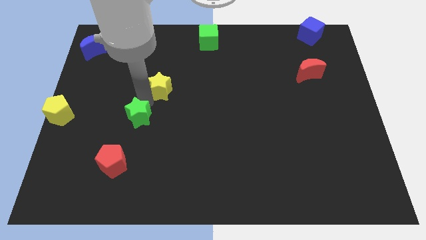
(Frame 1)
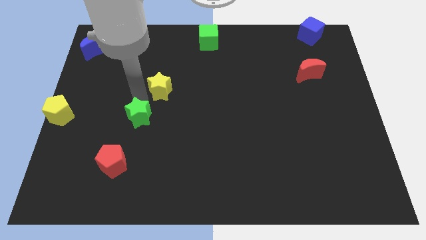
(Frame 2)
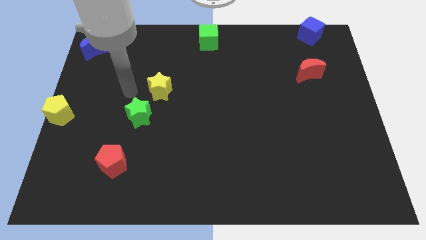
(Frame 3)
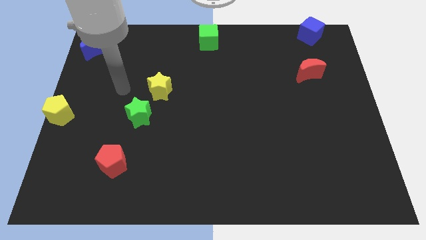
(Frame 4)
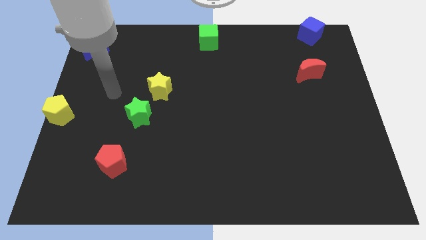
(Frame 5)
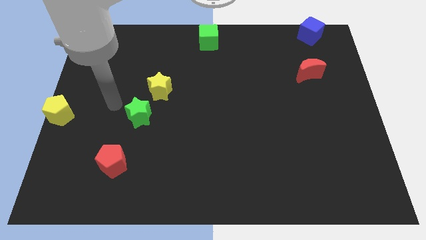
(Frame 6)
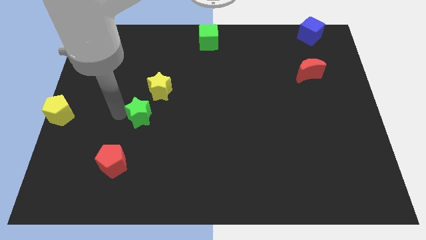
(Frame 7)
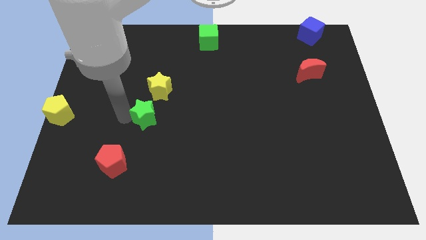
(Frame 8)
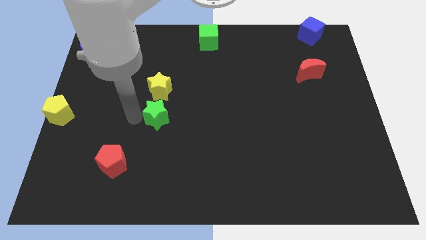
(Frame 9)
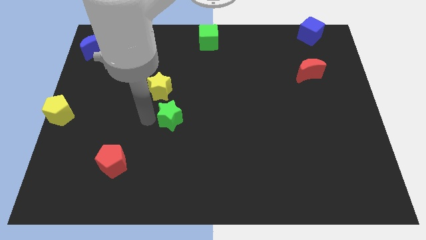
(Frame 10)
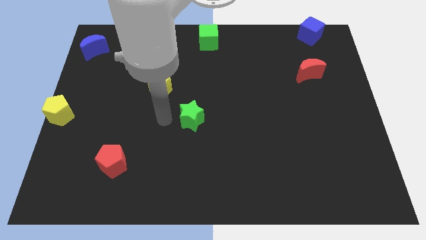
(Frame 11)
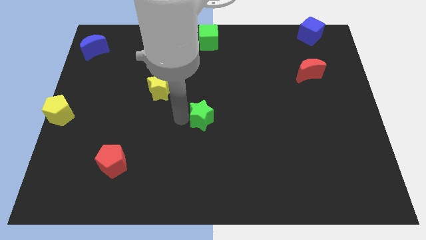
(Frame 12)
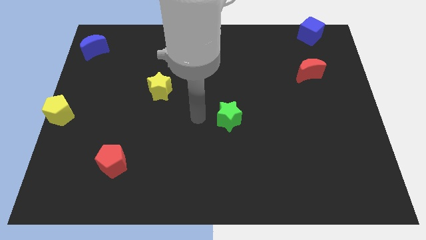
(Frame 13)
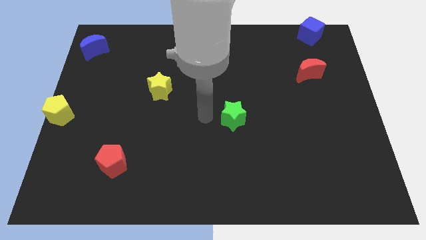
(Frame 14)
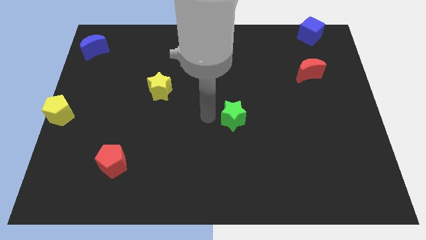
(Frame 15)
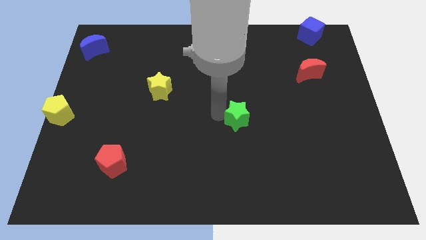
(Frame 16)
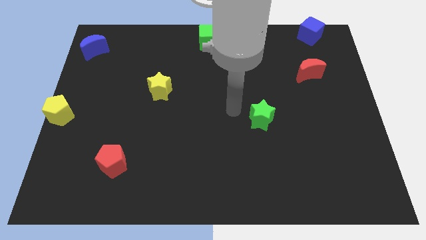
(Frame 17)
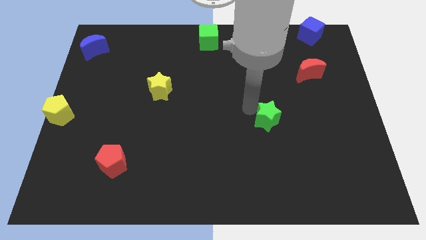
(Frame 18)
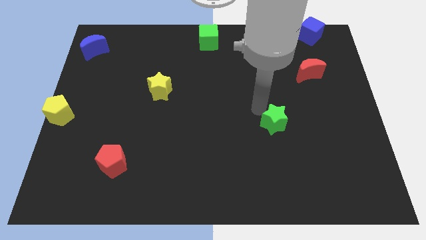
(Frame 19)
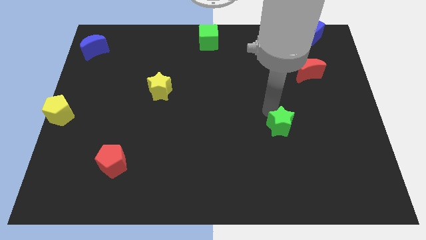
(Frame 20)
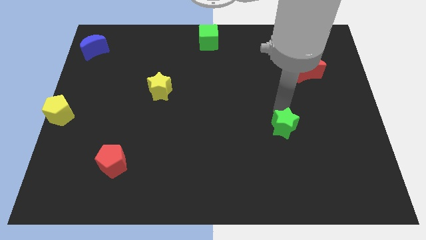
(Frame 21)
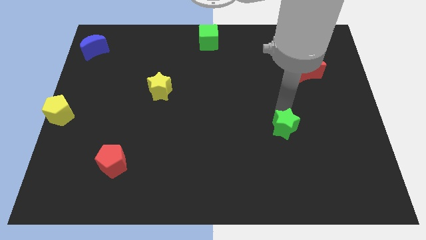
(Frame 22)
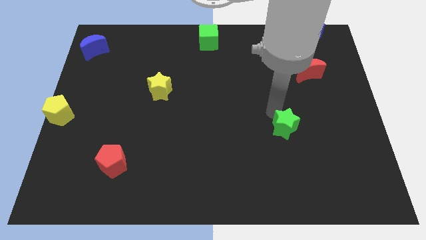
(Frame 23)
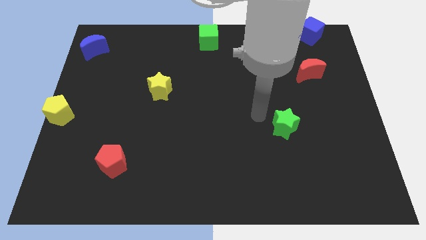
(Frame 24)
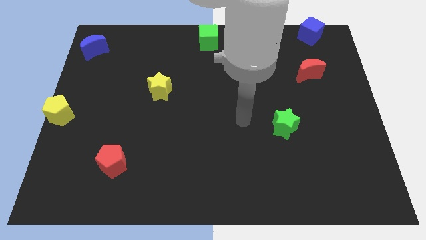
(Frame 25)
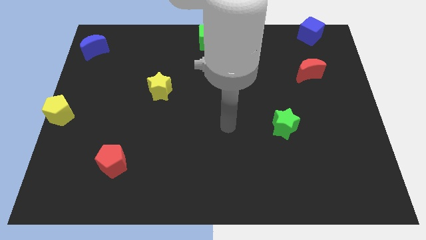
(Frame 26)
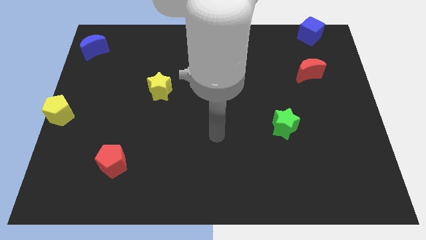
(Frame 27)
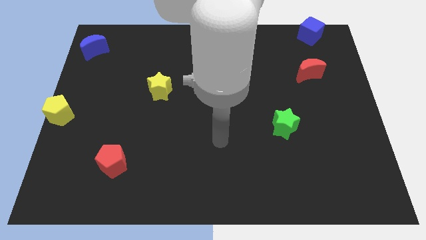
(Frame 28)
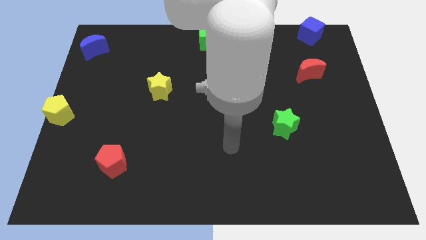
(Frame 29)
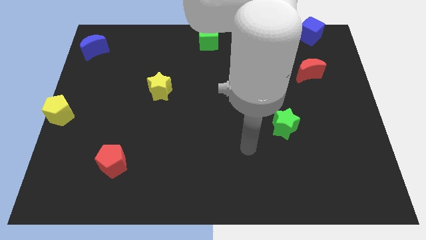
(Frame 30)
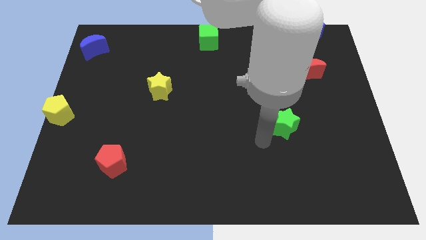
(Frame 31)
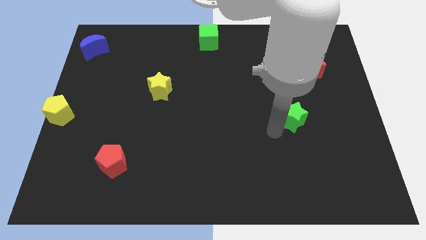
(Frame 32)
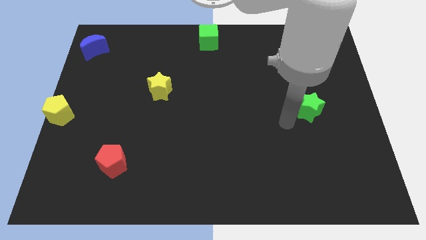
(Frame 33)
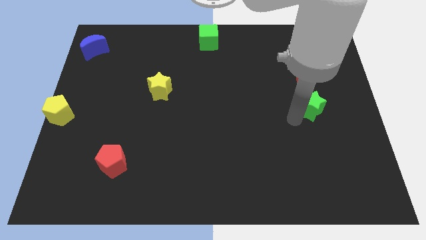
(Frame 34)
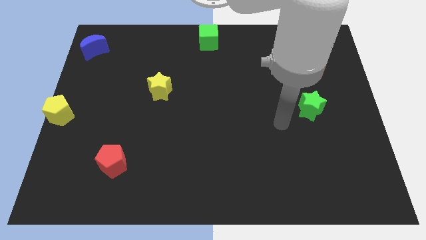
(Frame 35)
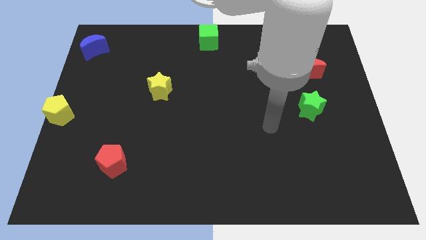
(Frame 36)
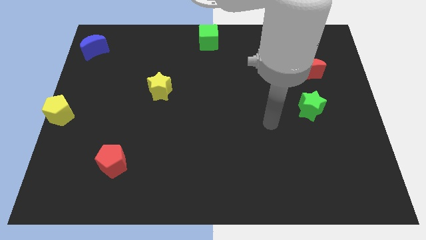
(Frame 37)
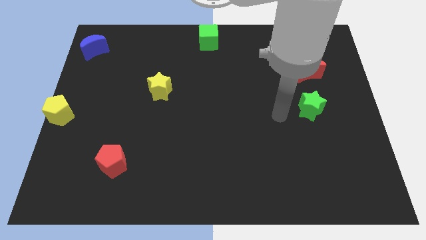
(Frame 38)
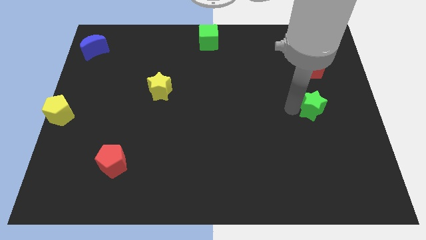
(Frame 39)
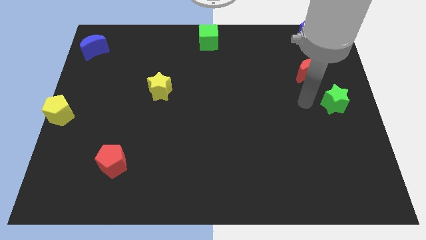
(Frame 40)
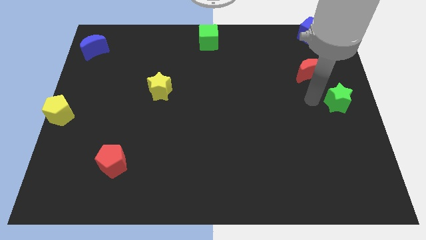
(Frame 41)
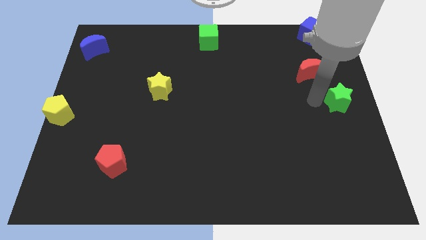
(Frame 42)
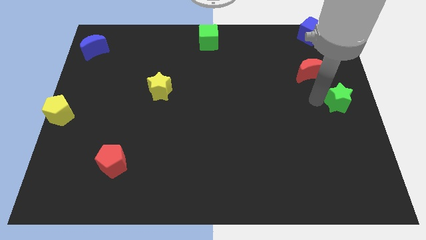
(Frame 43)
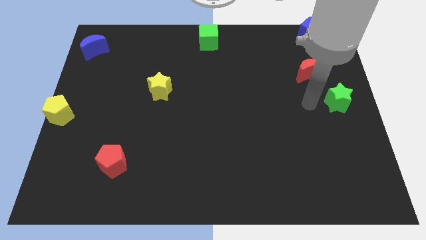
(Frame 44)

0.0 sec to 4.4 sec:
move the green star towards the center right

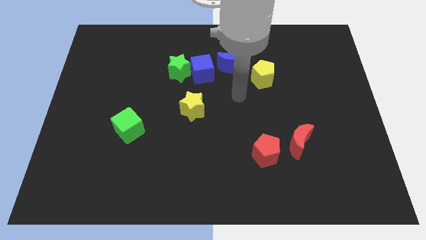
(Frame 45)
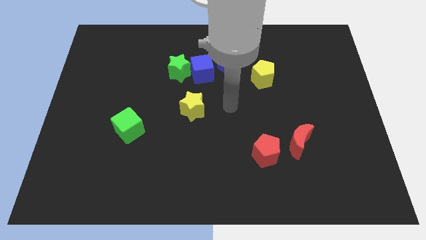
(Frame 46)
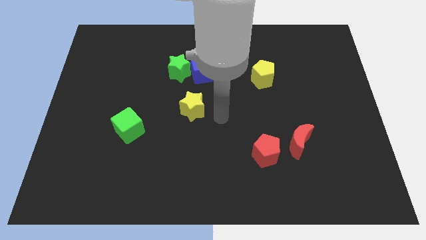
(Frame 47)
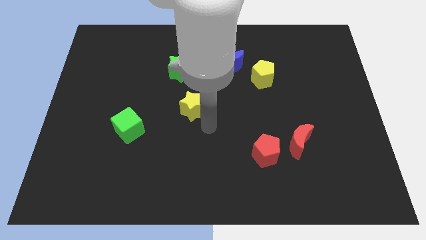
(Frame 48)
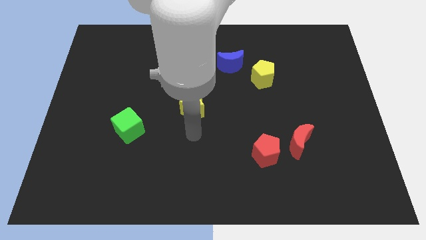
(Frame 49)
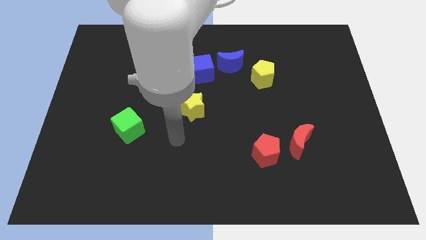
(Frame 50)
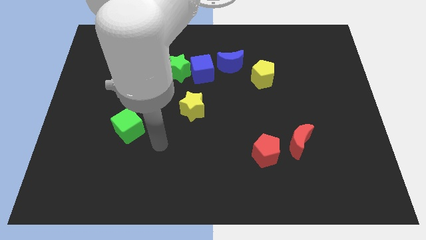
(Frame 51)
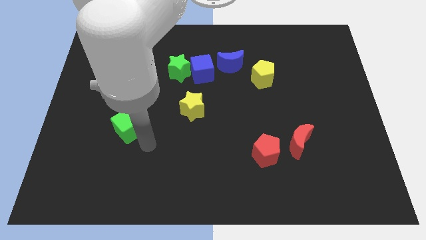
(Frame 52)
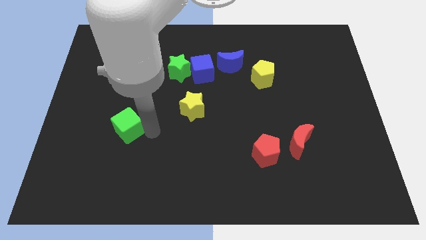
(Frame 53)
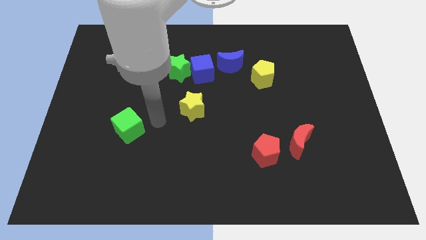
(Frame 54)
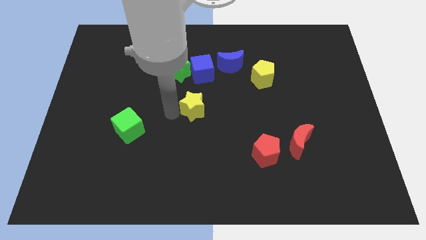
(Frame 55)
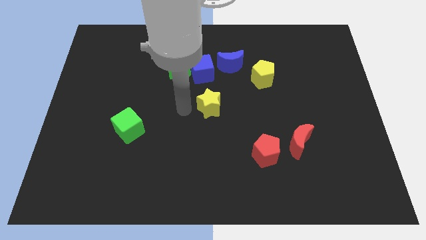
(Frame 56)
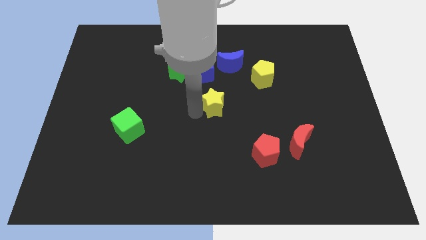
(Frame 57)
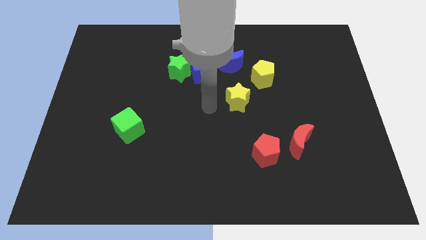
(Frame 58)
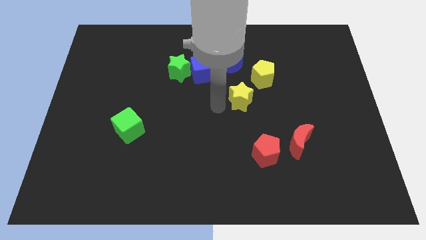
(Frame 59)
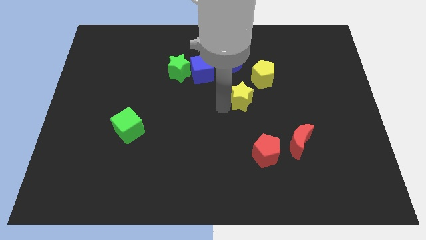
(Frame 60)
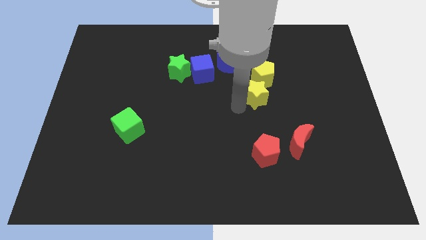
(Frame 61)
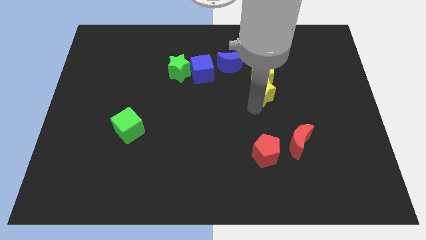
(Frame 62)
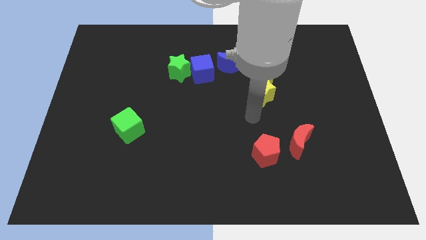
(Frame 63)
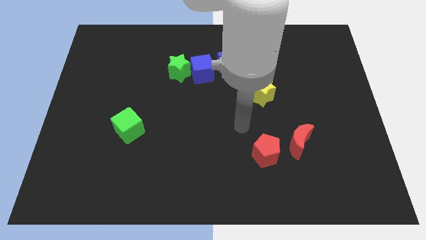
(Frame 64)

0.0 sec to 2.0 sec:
push the yellow star below yellow pentagon

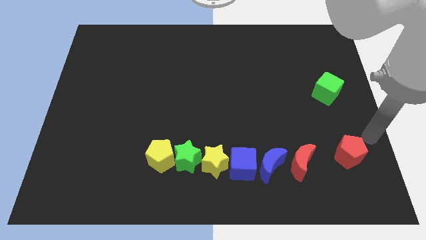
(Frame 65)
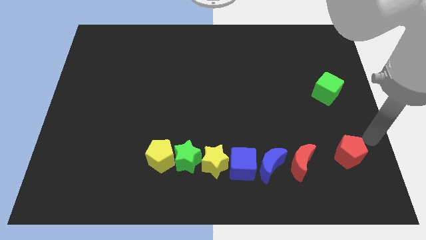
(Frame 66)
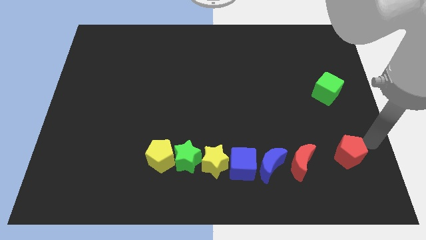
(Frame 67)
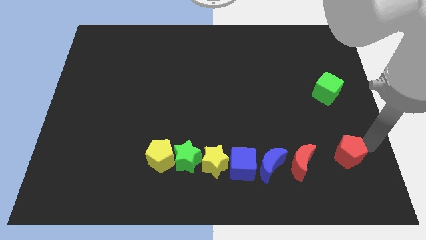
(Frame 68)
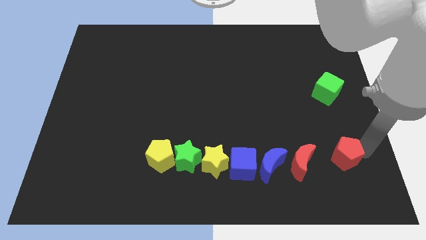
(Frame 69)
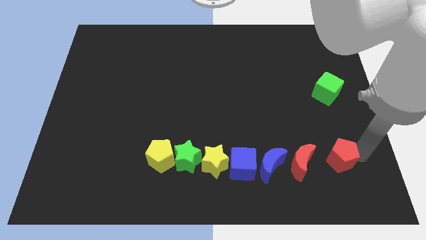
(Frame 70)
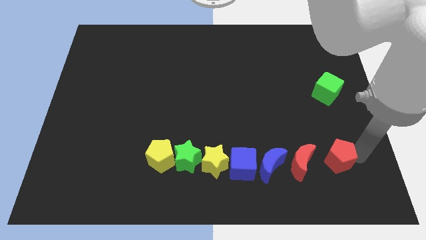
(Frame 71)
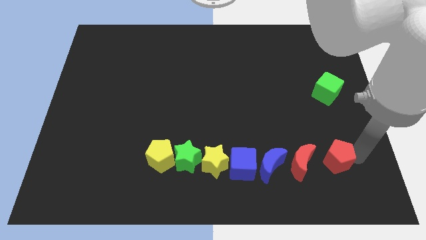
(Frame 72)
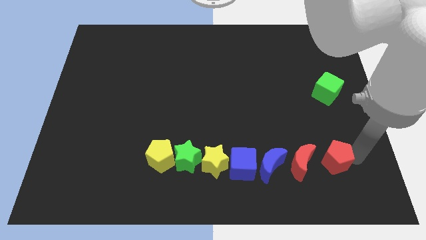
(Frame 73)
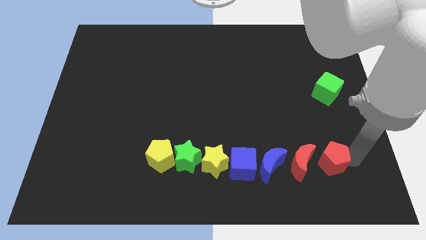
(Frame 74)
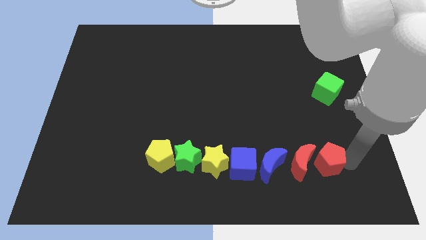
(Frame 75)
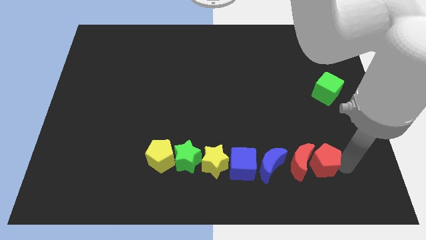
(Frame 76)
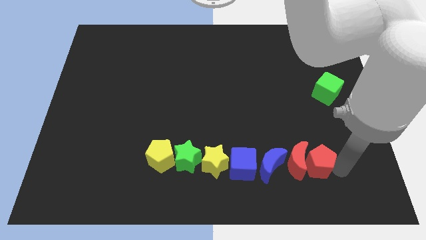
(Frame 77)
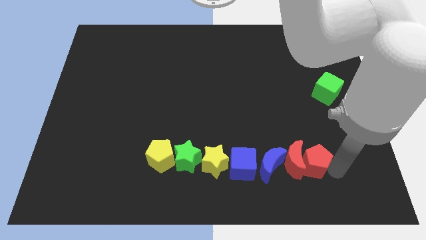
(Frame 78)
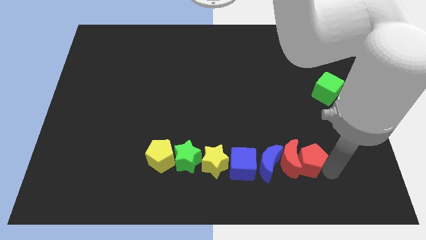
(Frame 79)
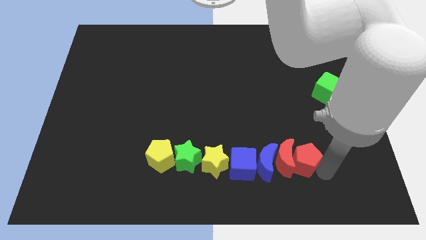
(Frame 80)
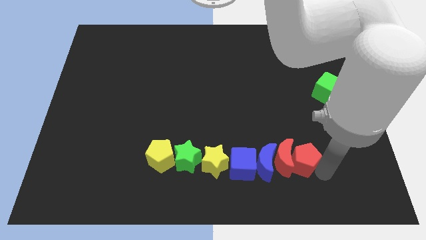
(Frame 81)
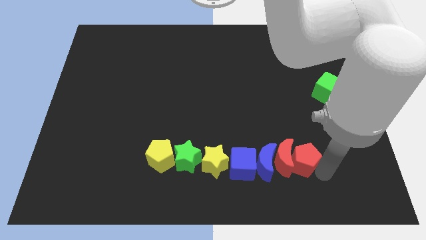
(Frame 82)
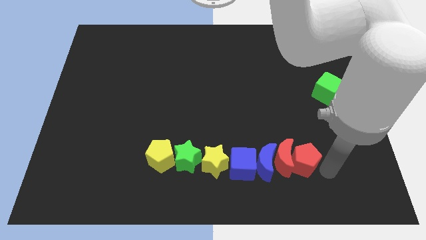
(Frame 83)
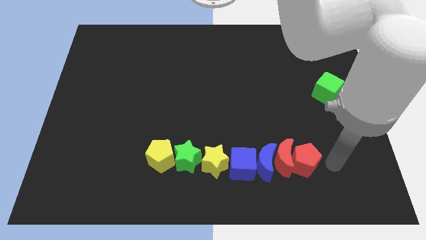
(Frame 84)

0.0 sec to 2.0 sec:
move the red pentagon into the red crescent

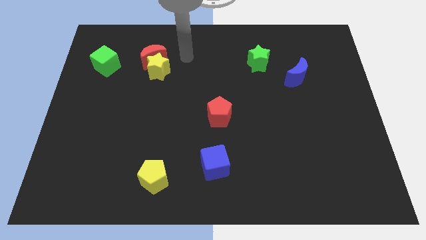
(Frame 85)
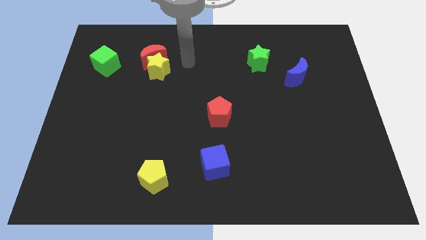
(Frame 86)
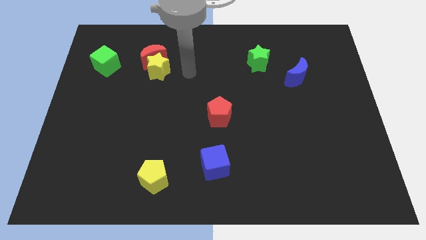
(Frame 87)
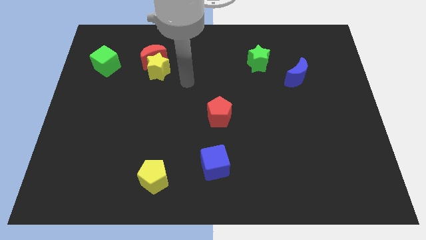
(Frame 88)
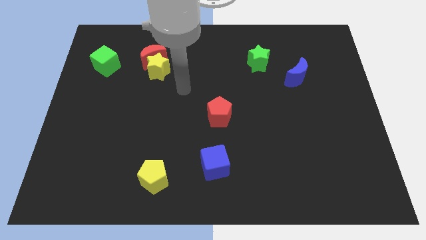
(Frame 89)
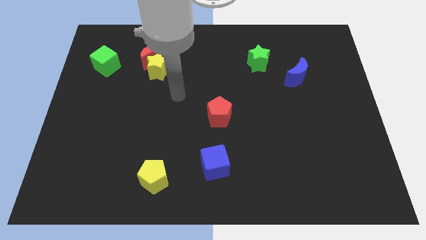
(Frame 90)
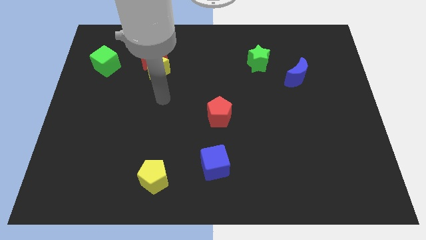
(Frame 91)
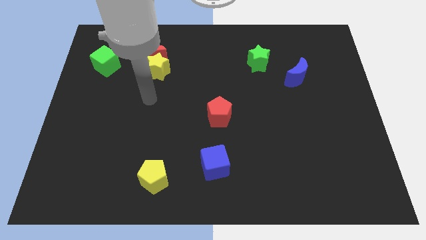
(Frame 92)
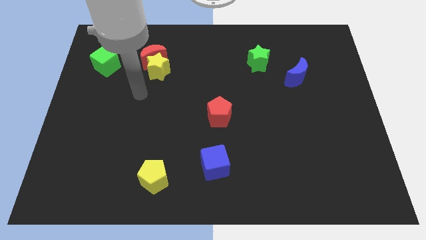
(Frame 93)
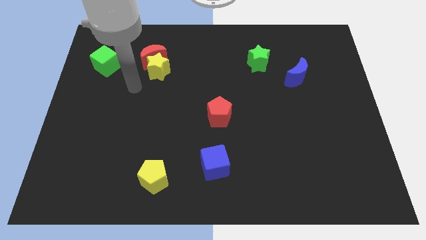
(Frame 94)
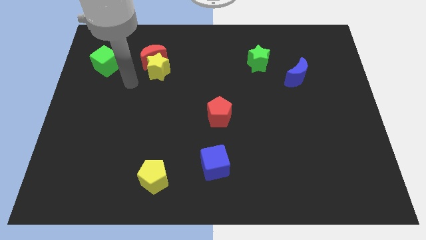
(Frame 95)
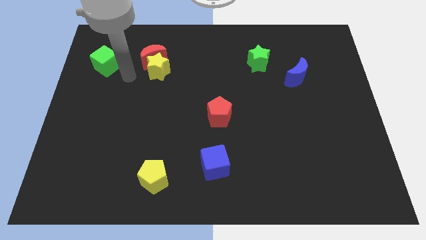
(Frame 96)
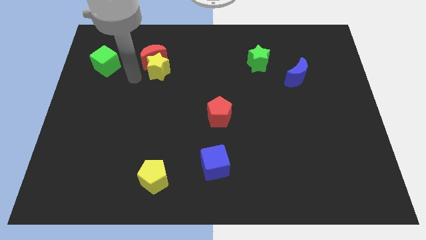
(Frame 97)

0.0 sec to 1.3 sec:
move your arm towards the yellow star
